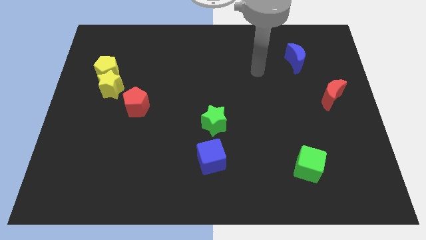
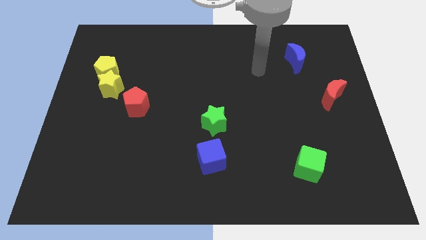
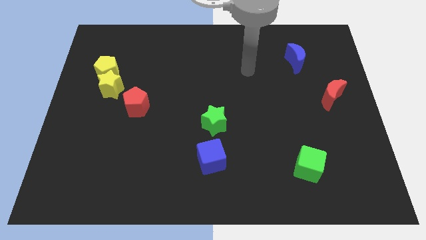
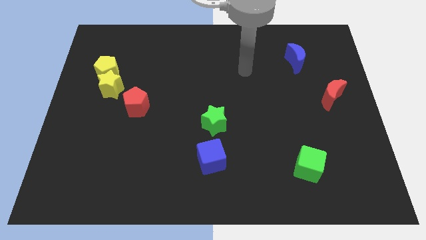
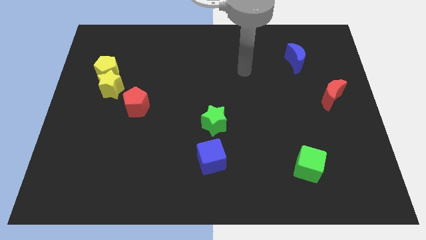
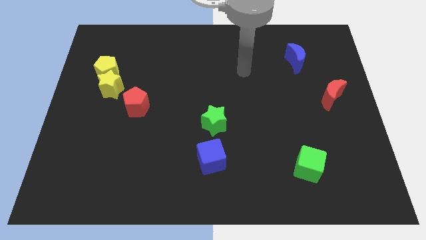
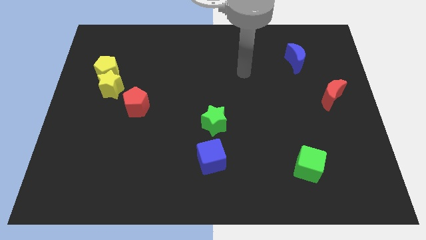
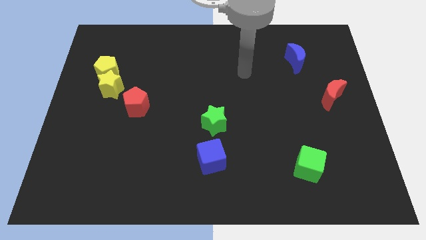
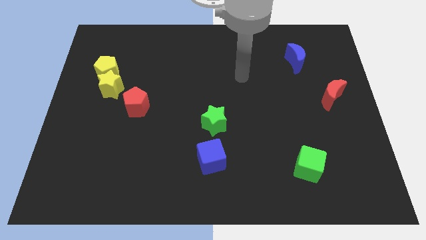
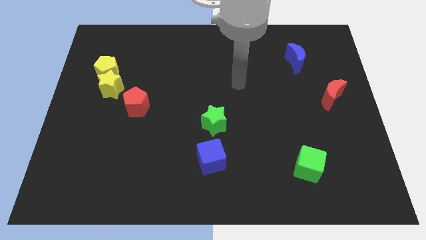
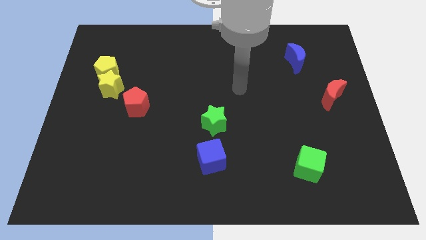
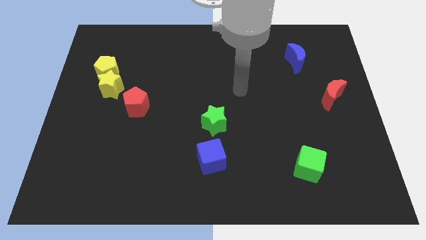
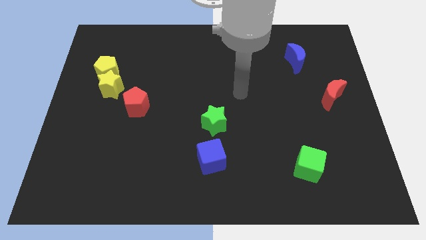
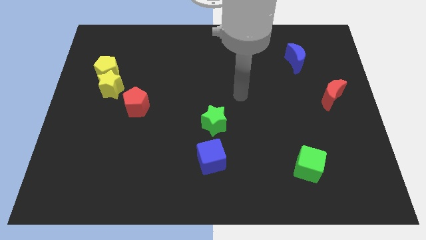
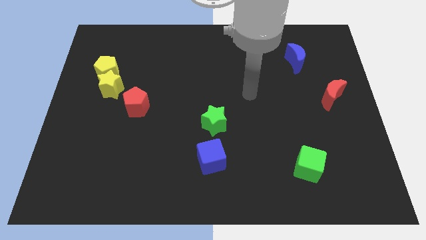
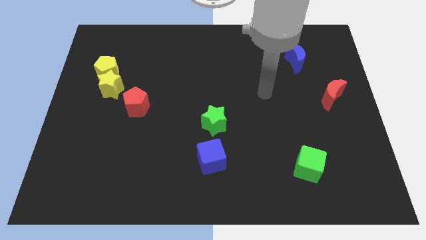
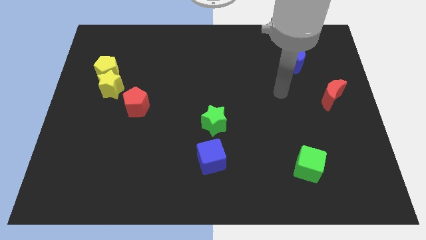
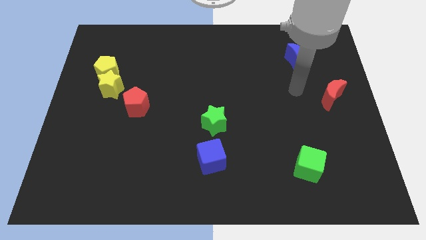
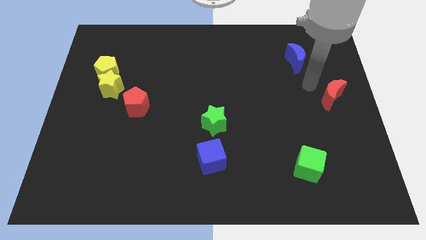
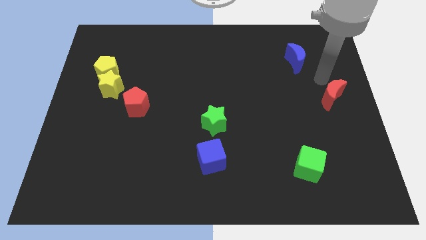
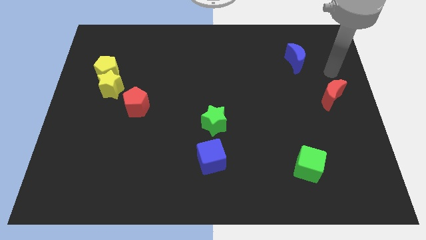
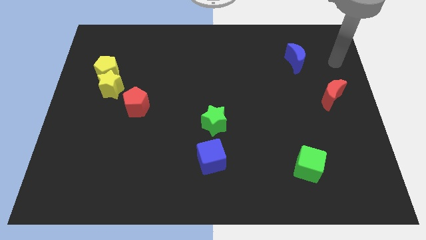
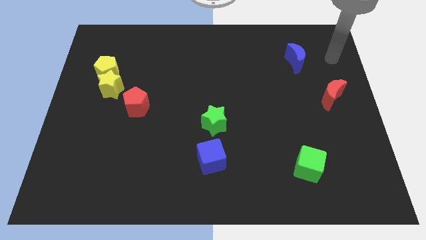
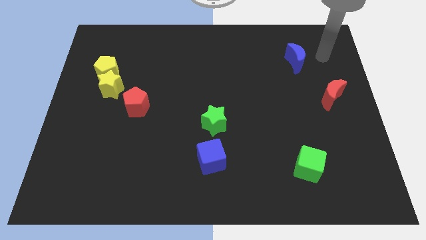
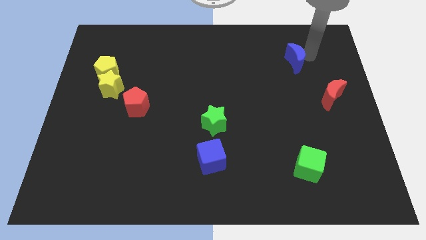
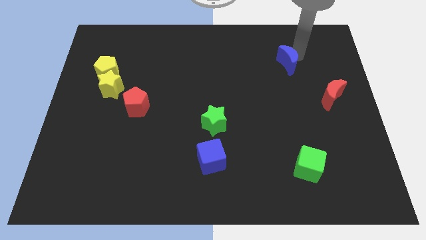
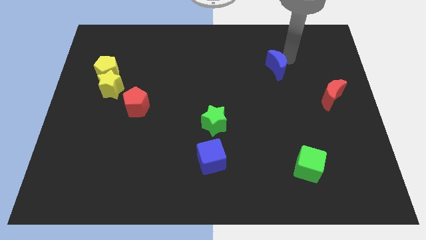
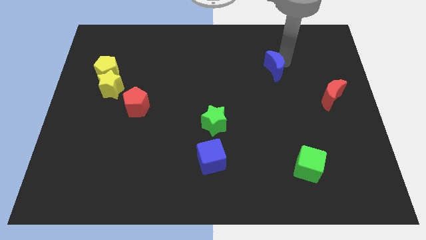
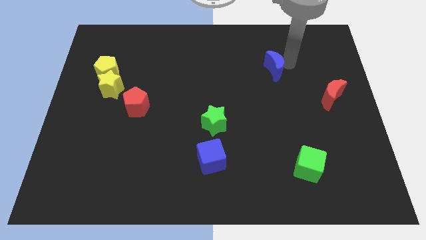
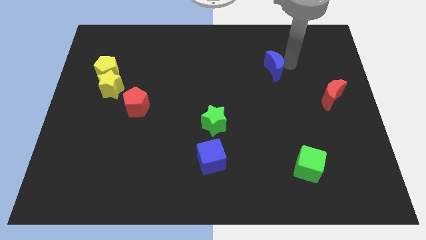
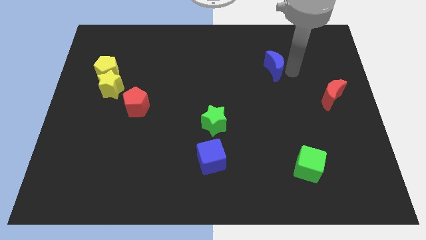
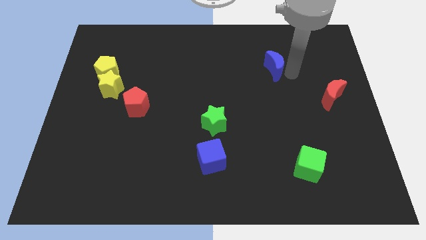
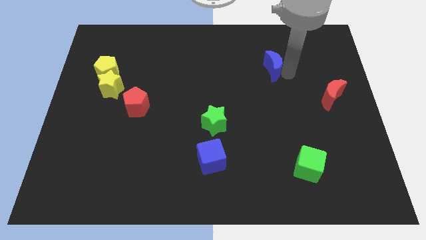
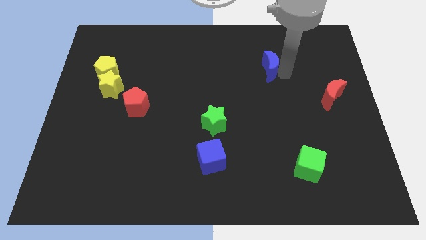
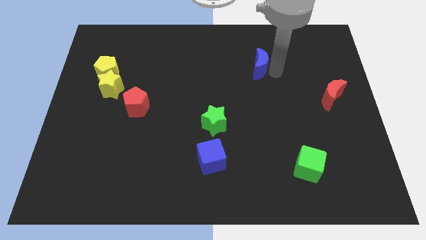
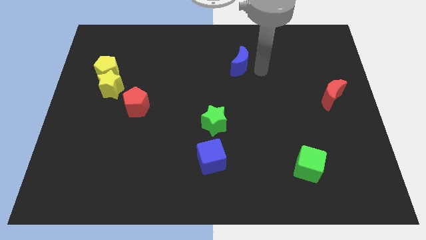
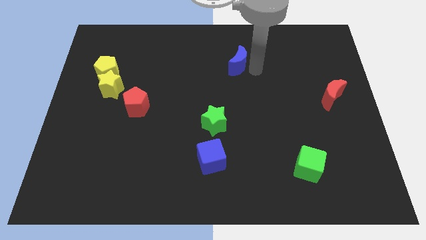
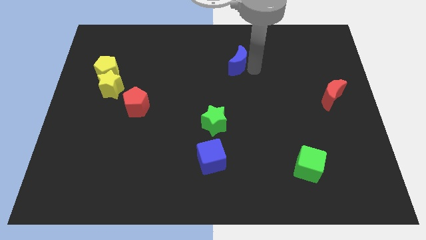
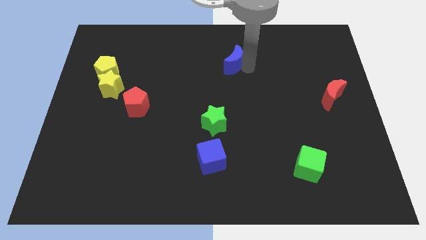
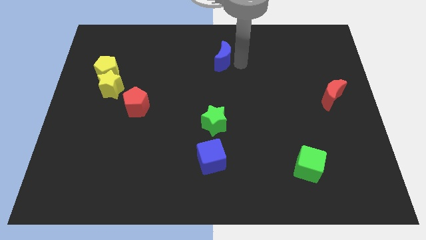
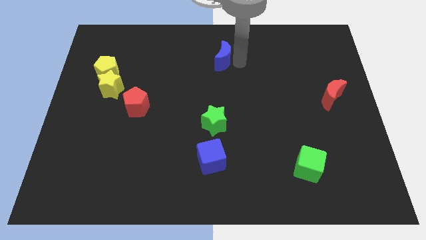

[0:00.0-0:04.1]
put the blue moon vertically above the green star

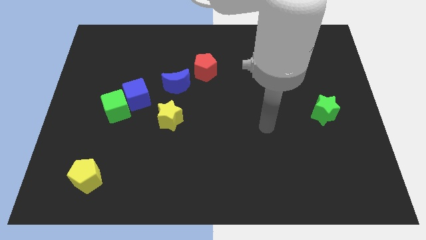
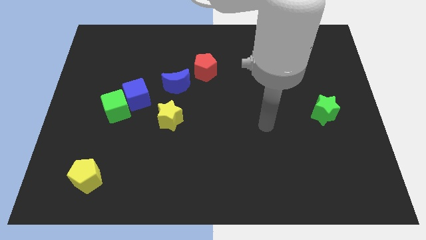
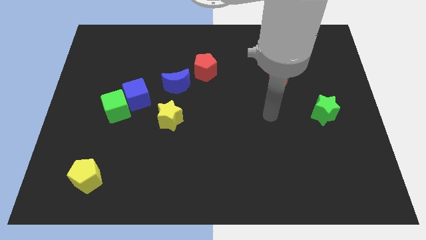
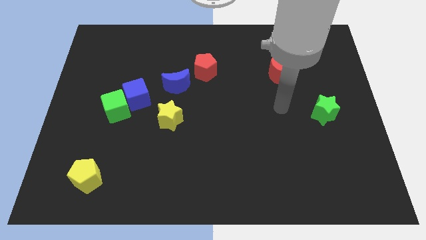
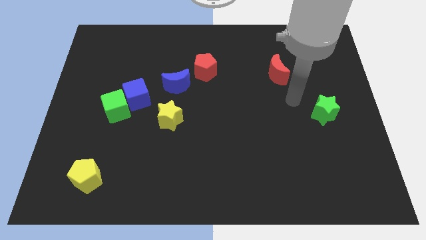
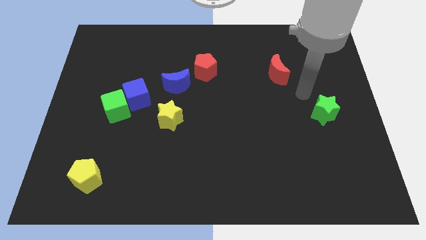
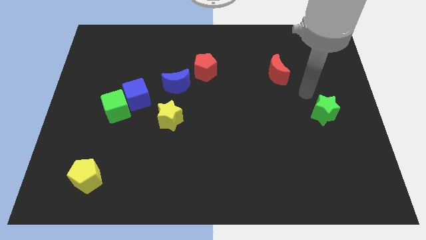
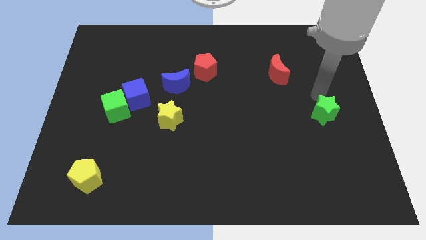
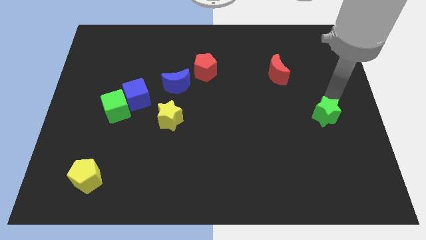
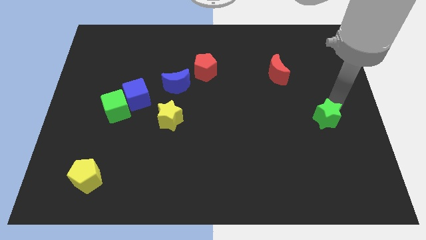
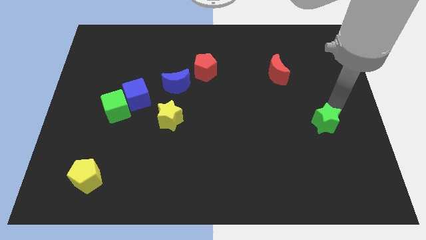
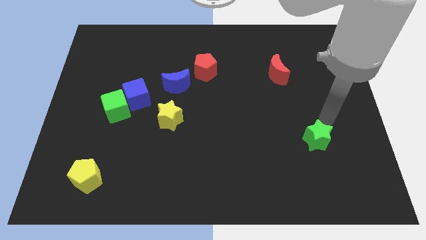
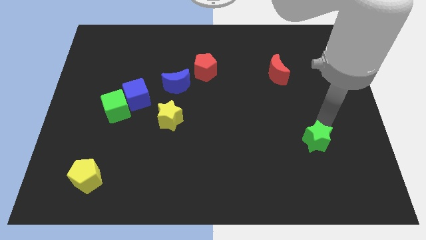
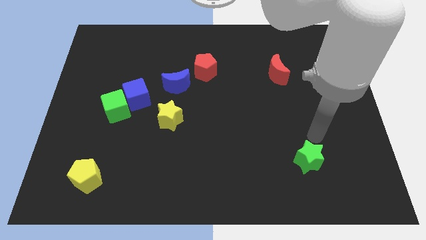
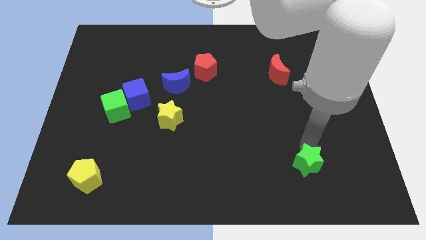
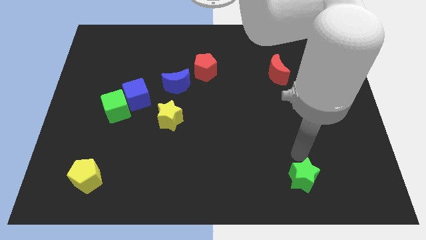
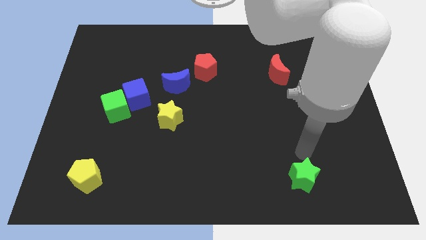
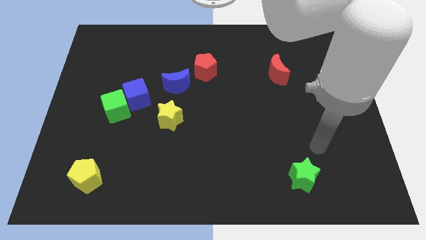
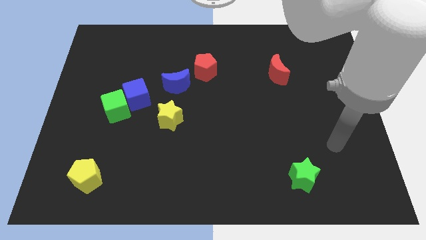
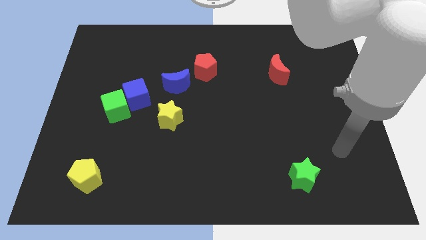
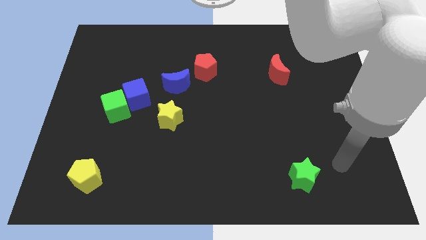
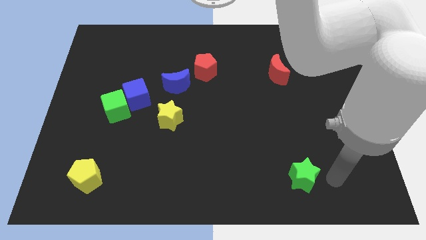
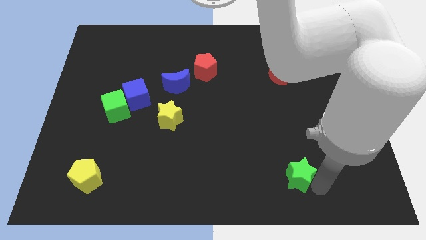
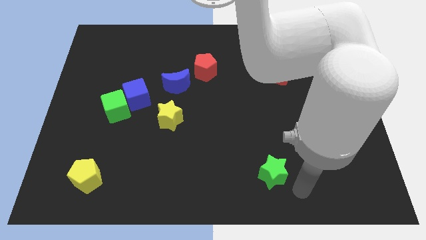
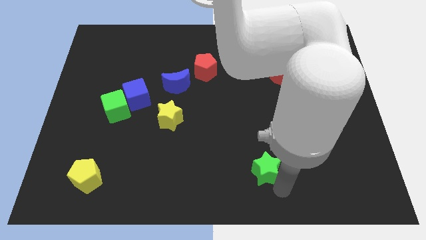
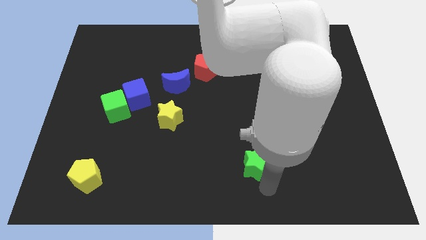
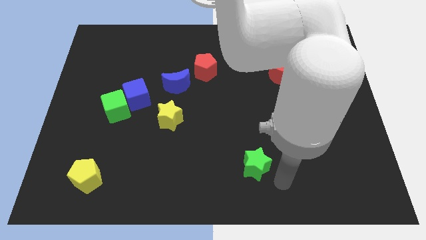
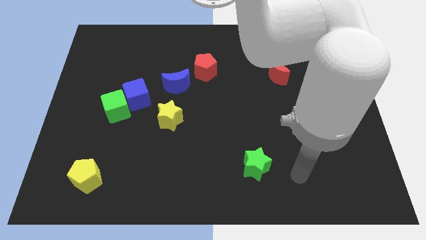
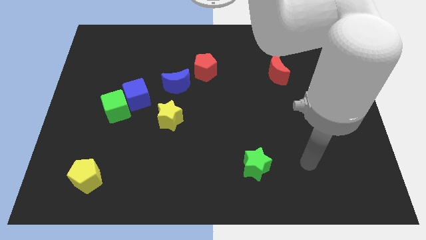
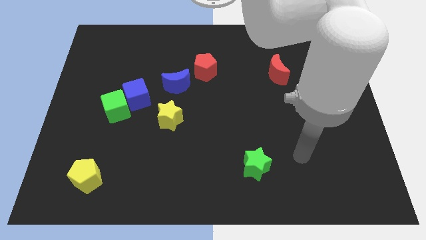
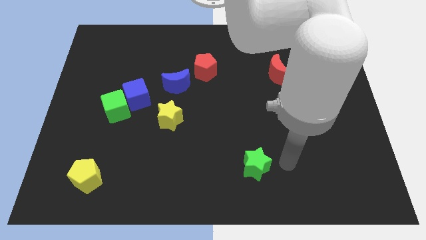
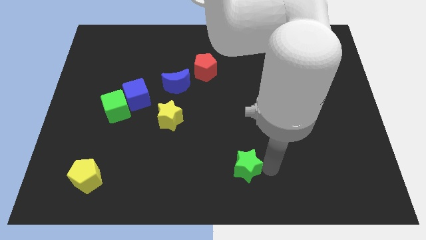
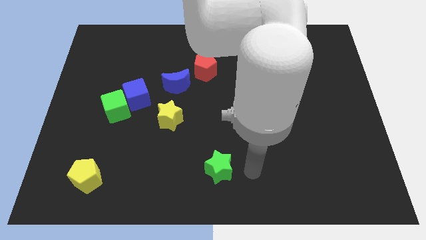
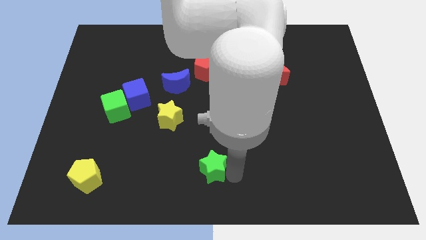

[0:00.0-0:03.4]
place the green star parallel to yellow pentagon

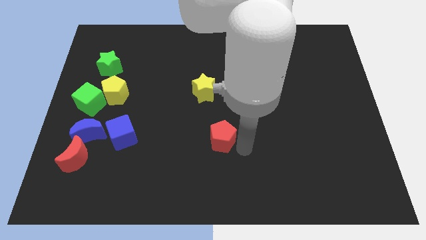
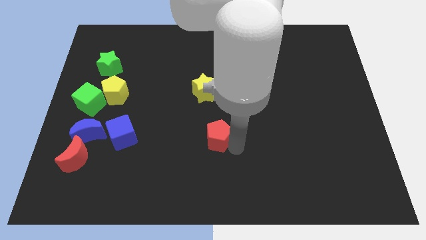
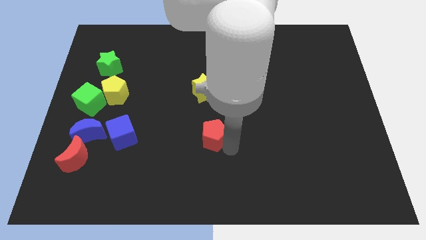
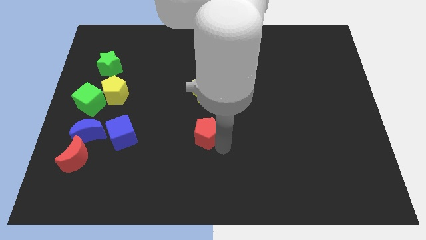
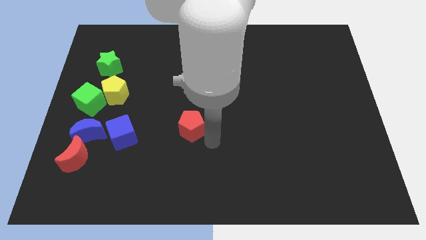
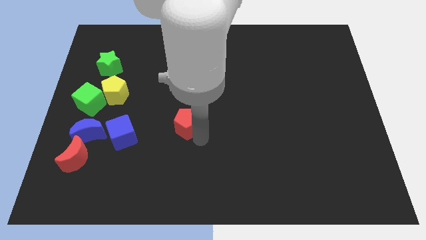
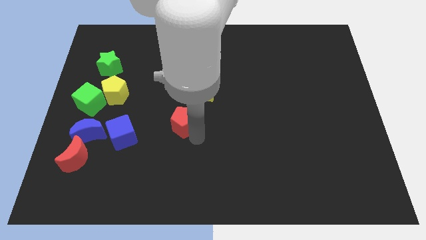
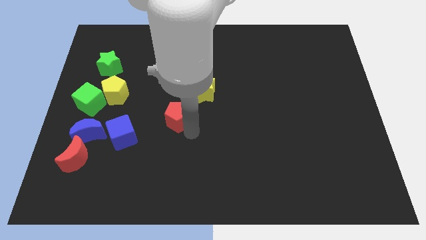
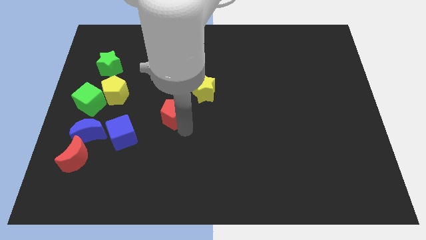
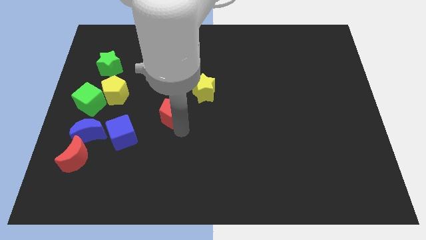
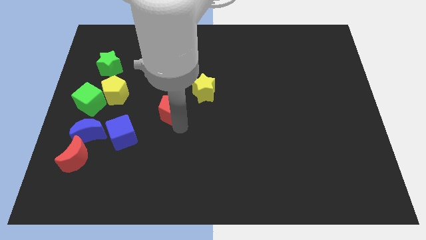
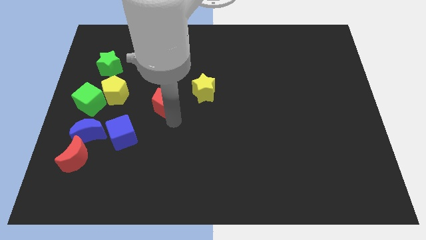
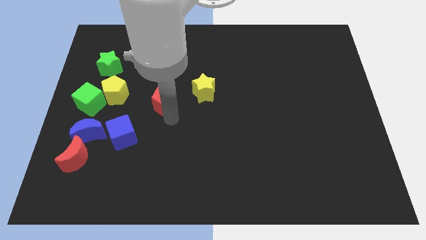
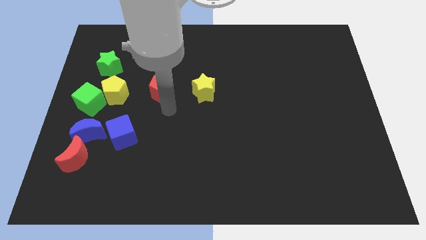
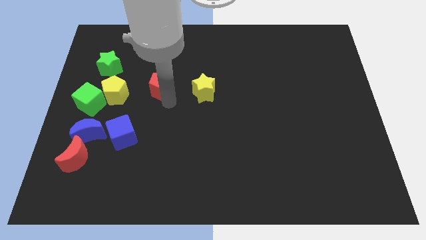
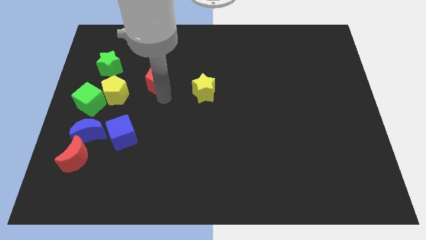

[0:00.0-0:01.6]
push the red pentagon to the left of the yellow star
